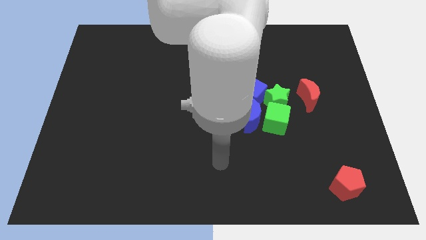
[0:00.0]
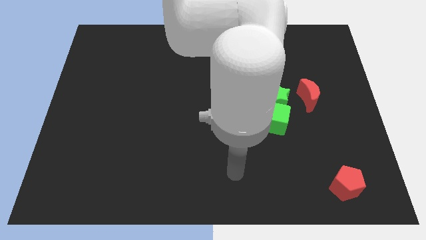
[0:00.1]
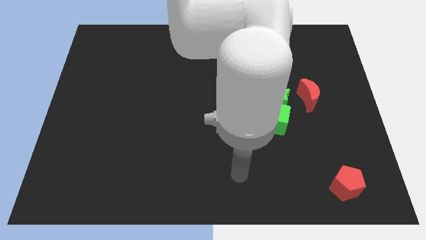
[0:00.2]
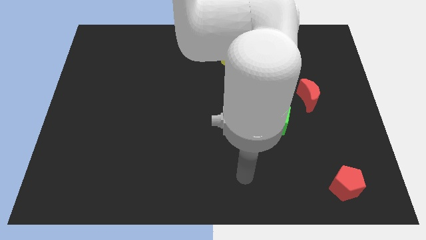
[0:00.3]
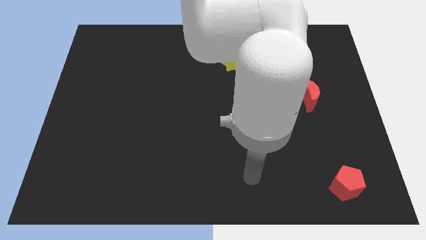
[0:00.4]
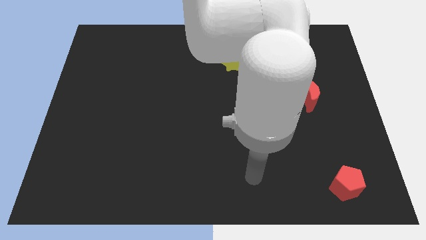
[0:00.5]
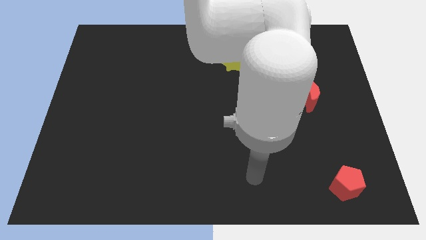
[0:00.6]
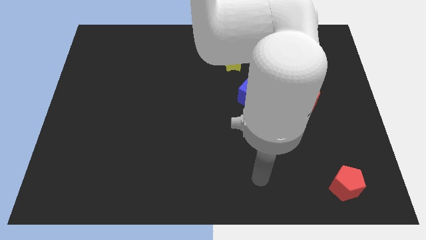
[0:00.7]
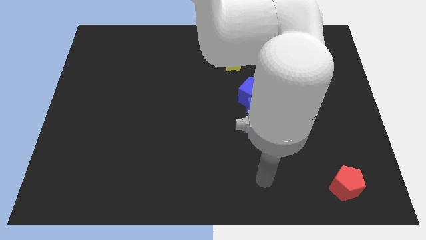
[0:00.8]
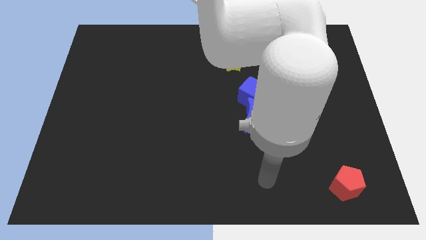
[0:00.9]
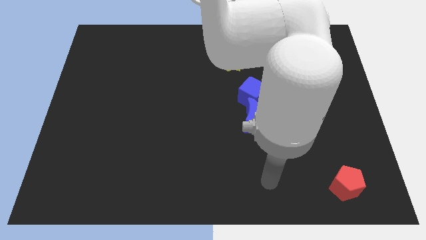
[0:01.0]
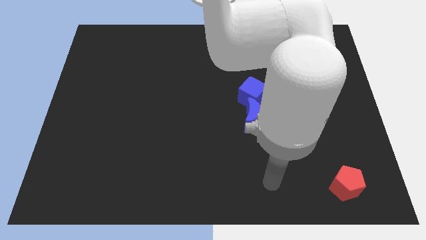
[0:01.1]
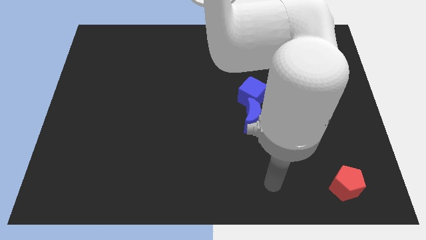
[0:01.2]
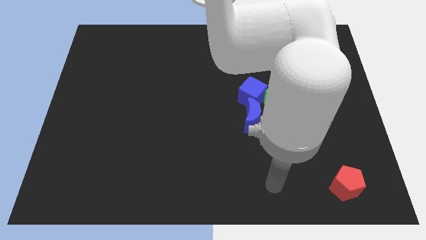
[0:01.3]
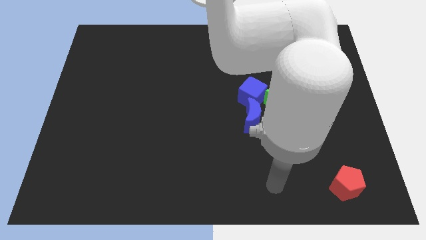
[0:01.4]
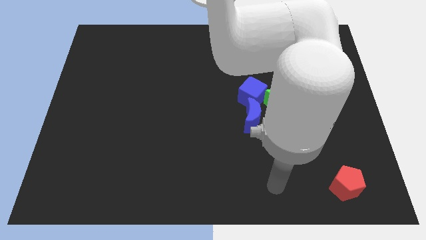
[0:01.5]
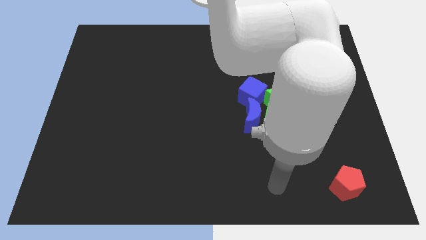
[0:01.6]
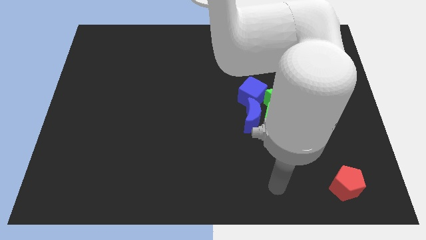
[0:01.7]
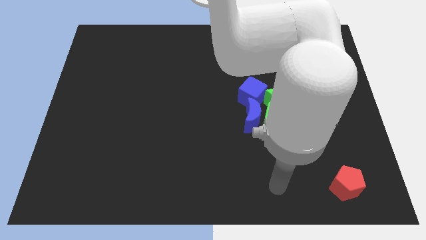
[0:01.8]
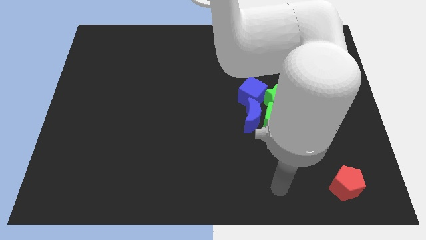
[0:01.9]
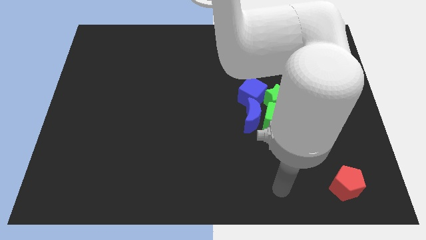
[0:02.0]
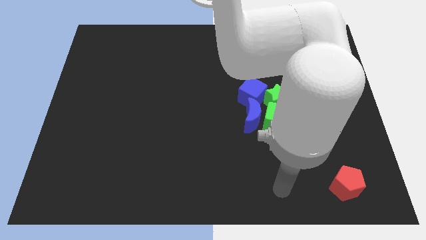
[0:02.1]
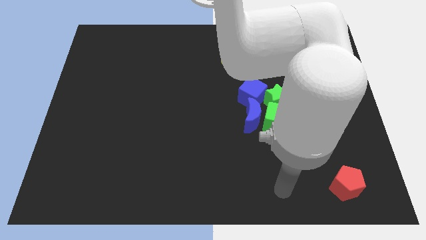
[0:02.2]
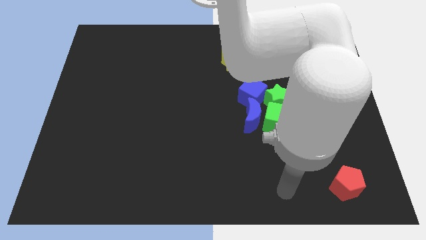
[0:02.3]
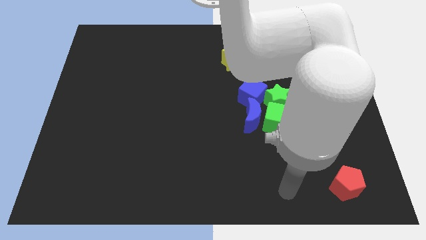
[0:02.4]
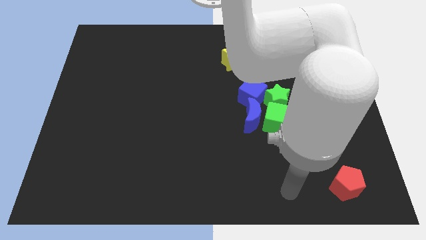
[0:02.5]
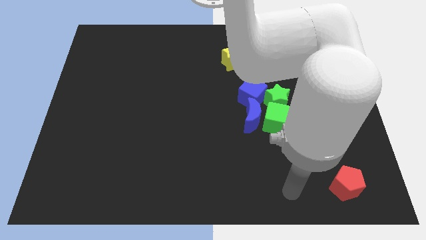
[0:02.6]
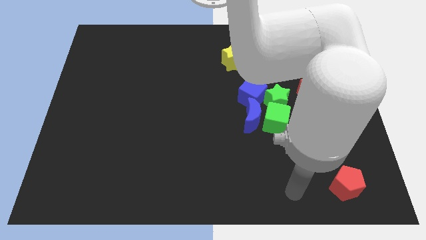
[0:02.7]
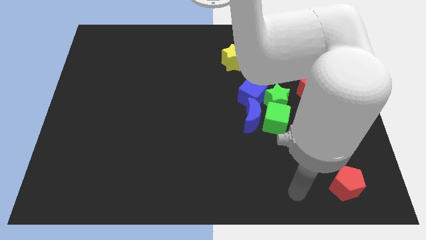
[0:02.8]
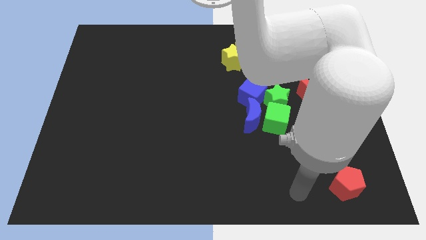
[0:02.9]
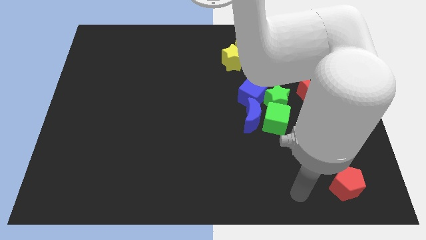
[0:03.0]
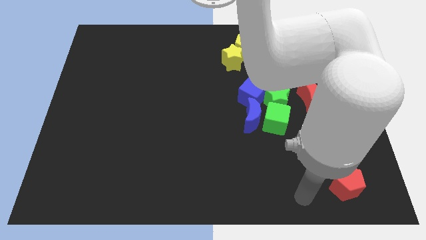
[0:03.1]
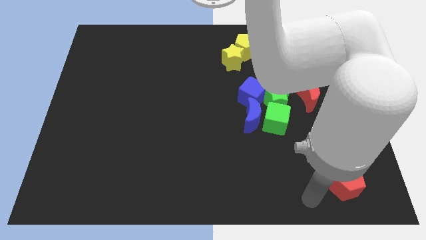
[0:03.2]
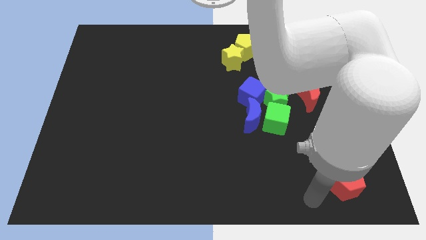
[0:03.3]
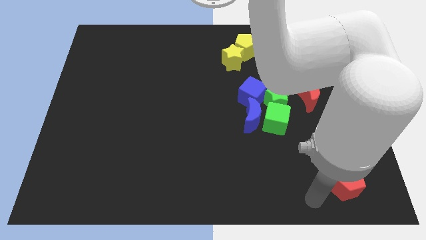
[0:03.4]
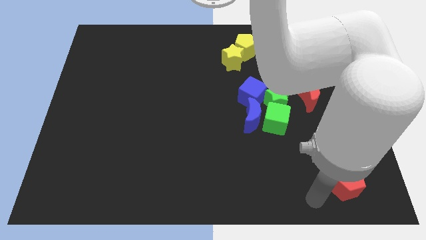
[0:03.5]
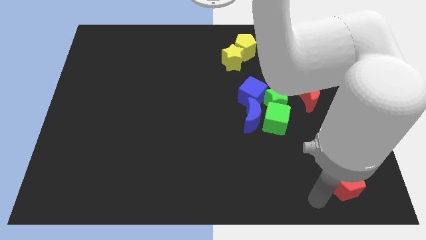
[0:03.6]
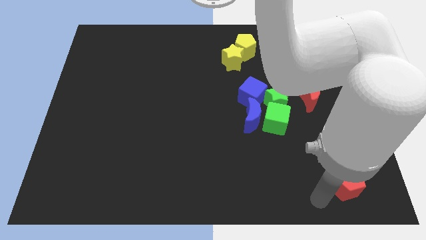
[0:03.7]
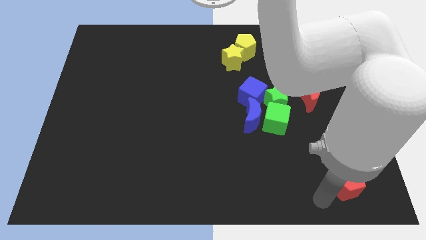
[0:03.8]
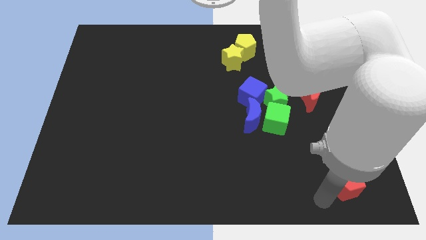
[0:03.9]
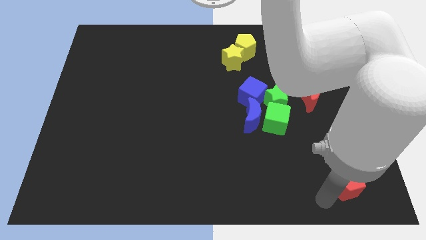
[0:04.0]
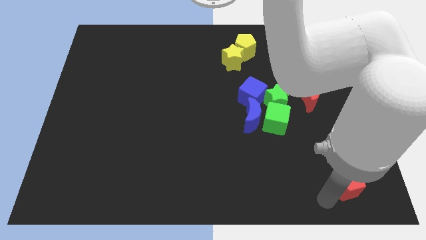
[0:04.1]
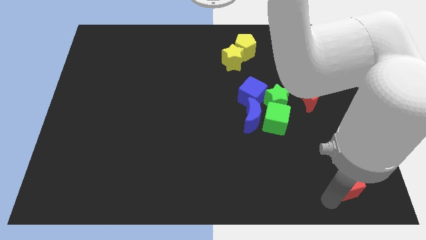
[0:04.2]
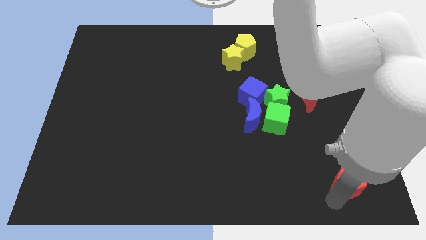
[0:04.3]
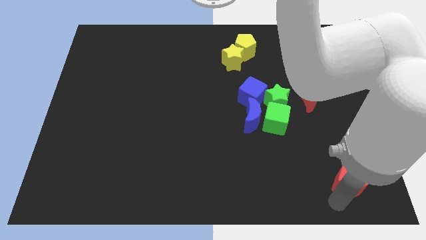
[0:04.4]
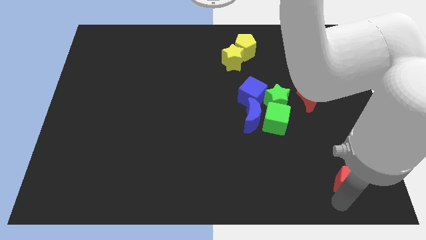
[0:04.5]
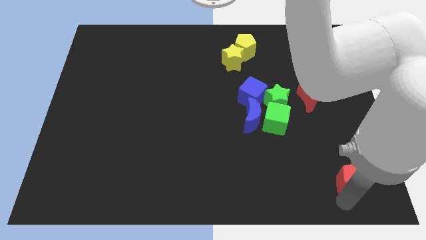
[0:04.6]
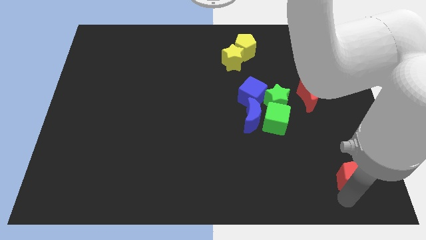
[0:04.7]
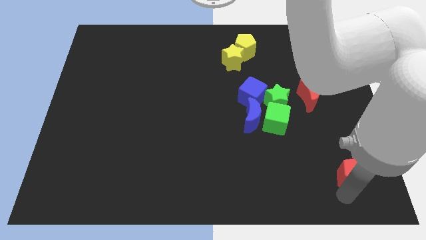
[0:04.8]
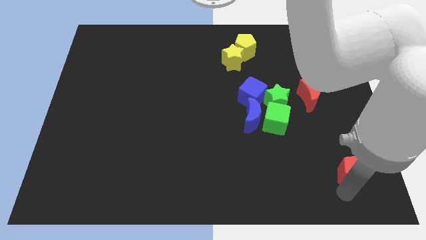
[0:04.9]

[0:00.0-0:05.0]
push red pentagon slightly up

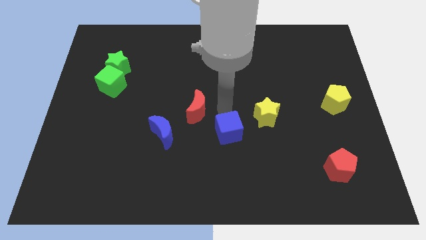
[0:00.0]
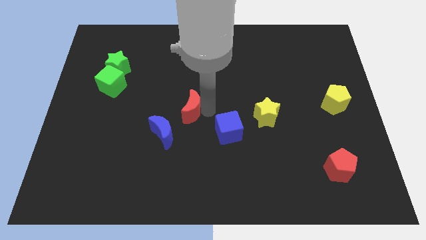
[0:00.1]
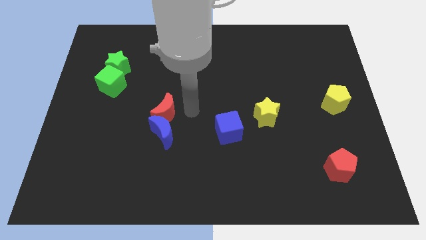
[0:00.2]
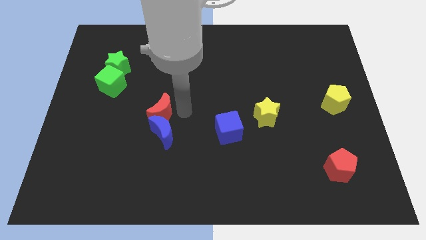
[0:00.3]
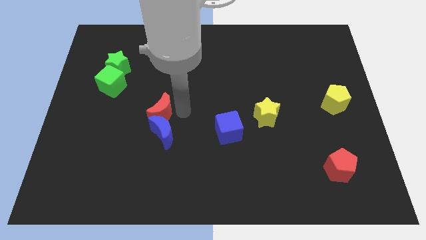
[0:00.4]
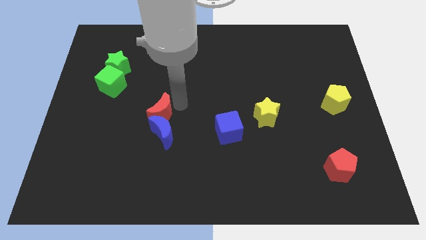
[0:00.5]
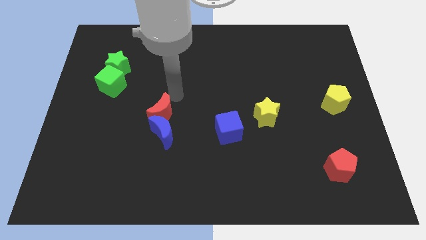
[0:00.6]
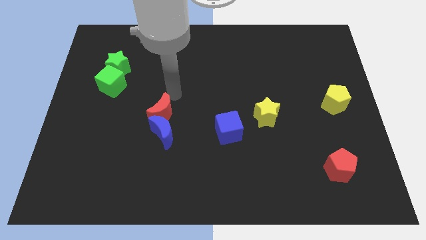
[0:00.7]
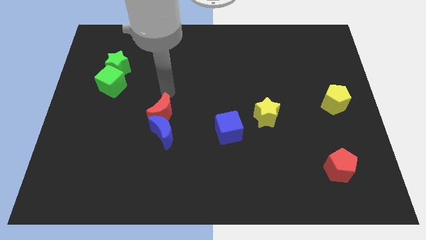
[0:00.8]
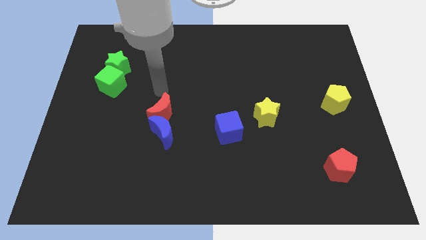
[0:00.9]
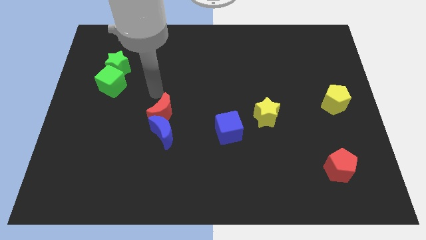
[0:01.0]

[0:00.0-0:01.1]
place the red moon to the top of the blue moon

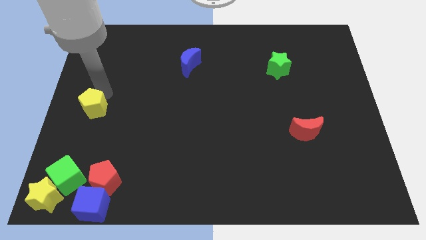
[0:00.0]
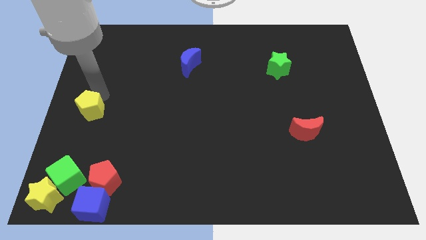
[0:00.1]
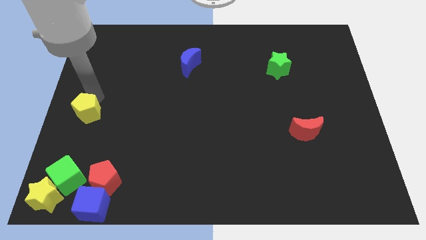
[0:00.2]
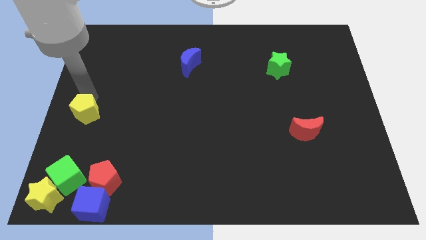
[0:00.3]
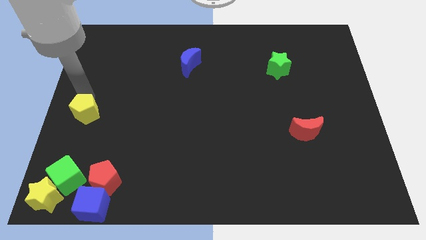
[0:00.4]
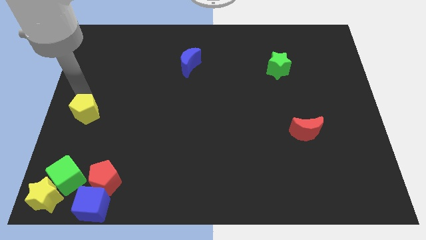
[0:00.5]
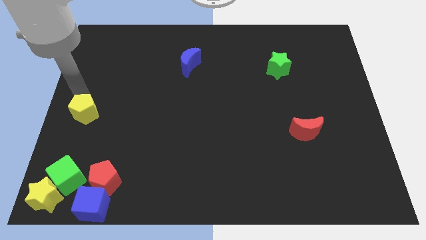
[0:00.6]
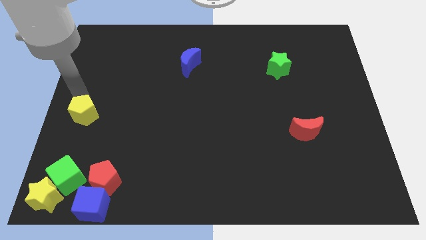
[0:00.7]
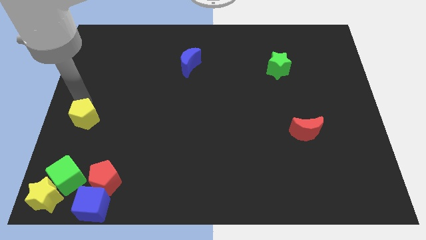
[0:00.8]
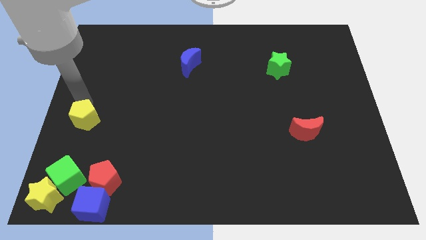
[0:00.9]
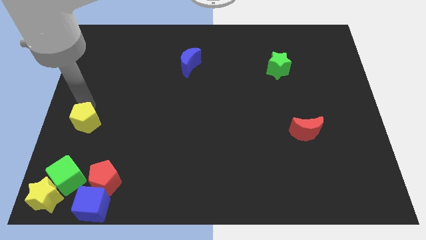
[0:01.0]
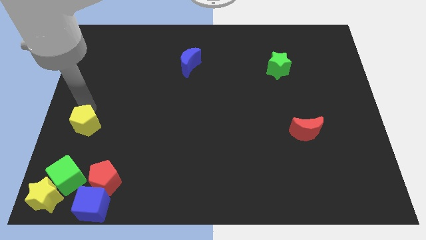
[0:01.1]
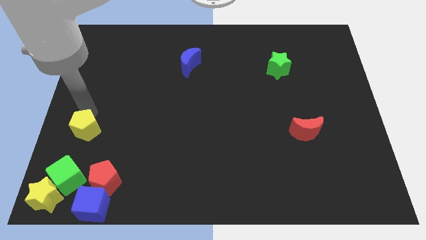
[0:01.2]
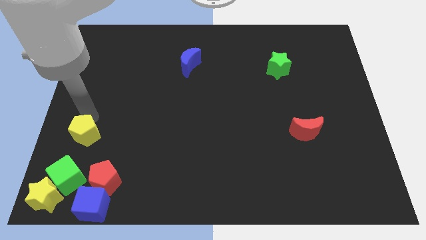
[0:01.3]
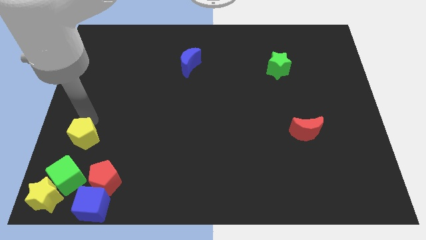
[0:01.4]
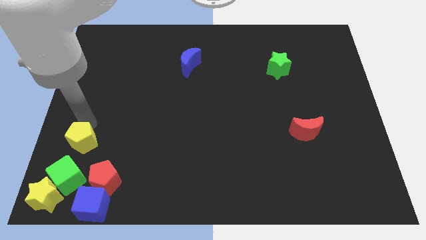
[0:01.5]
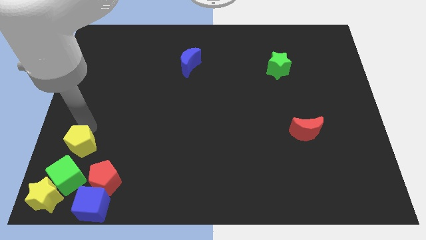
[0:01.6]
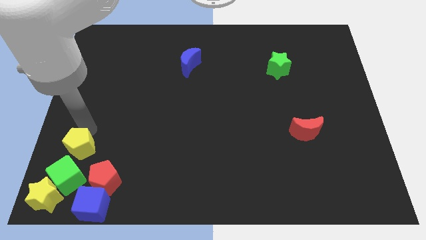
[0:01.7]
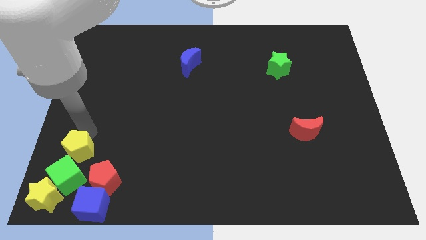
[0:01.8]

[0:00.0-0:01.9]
place the yellow pentagon to the top of the green cube

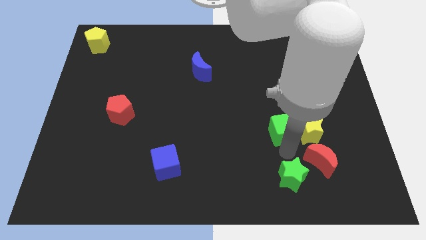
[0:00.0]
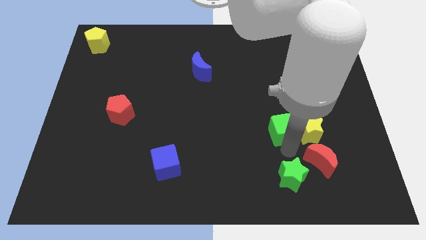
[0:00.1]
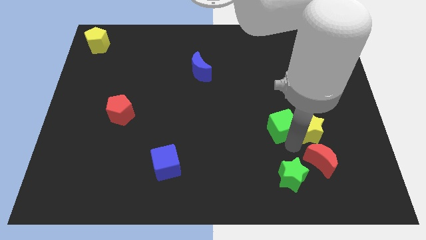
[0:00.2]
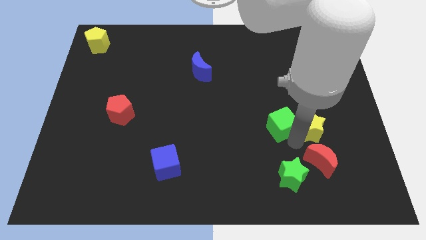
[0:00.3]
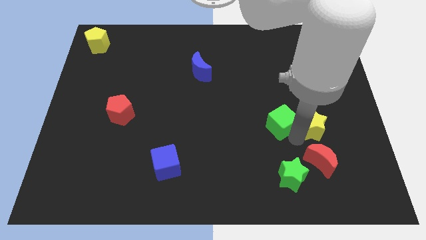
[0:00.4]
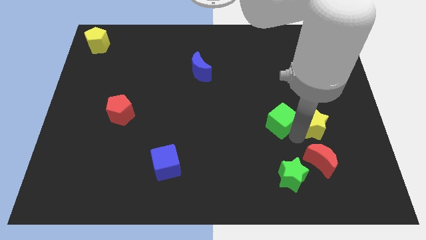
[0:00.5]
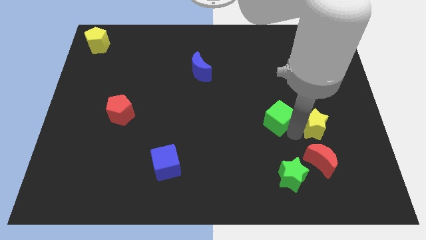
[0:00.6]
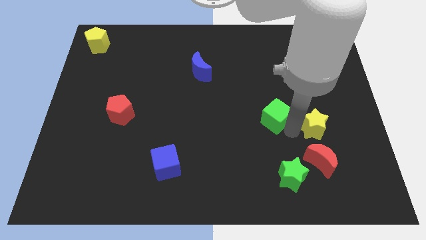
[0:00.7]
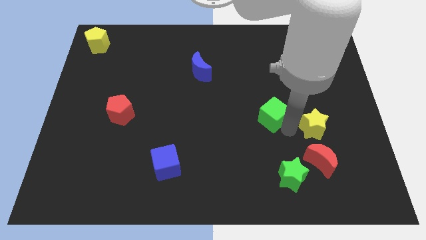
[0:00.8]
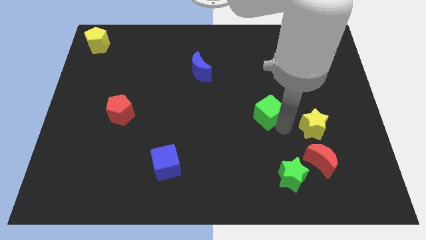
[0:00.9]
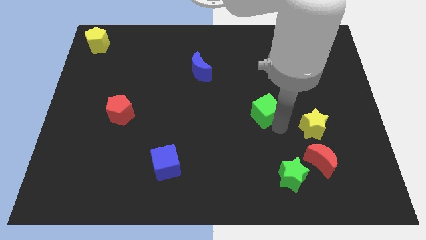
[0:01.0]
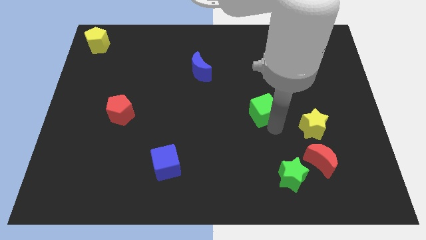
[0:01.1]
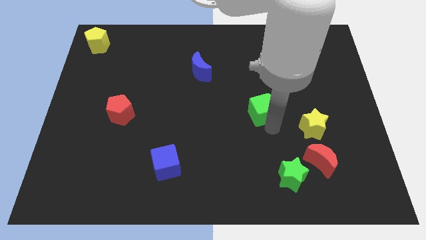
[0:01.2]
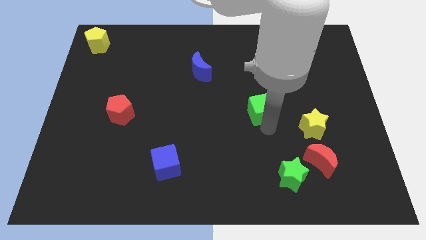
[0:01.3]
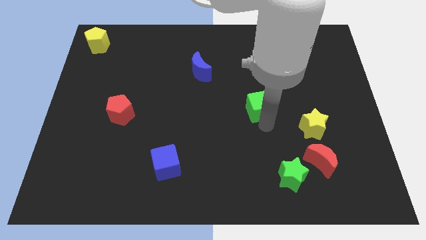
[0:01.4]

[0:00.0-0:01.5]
separate the green cube from the yellow star
